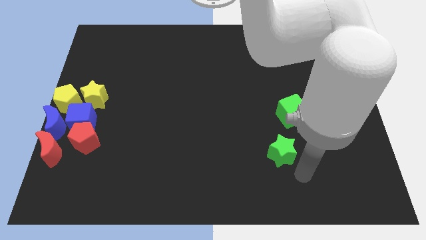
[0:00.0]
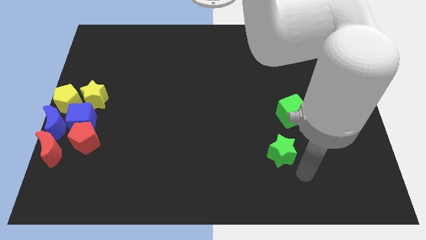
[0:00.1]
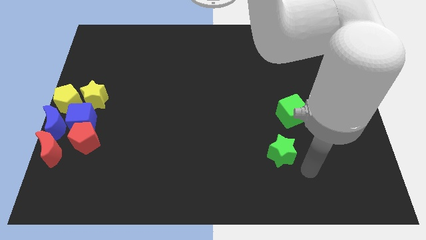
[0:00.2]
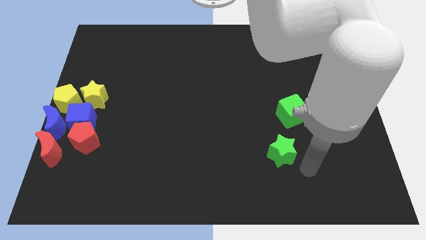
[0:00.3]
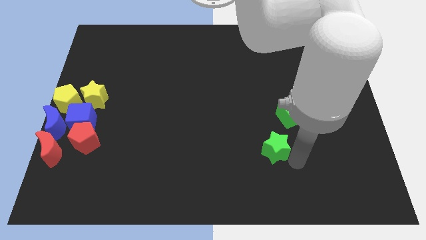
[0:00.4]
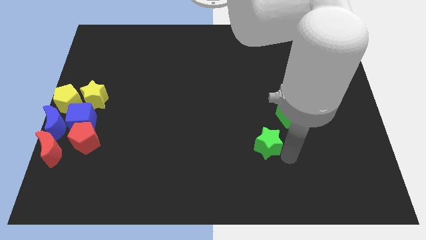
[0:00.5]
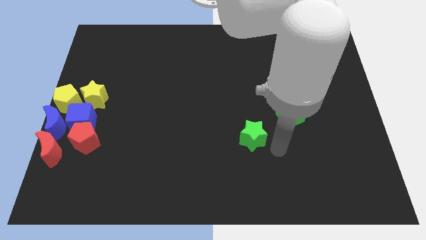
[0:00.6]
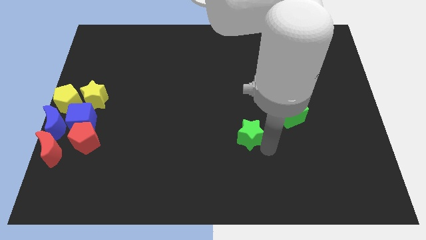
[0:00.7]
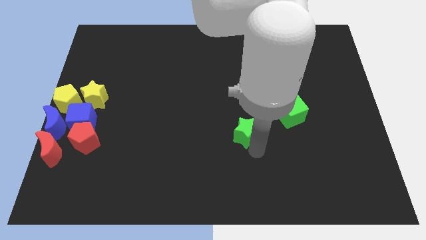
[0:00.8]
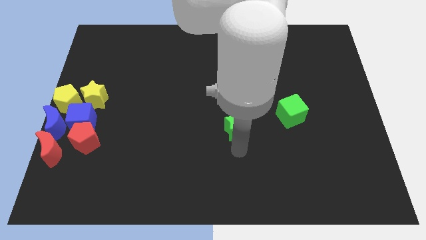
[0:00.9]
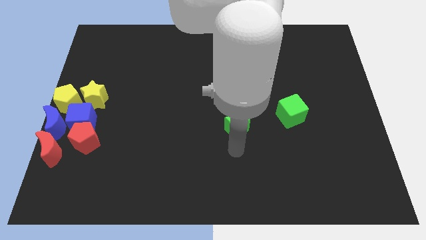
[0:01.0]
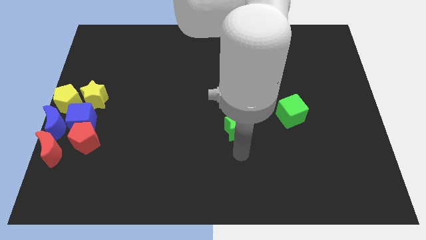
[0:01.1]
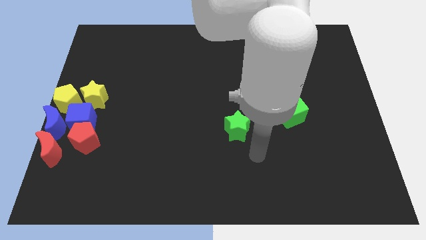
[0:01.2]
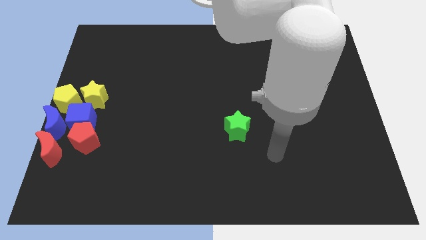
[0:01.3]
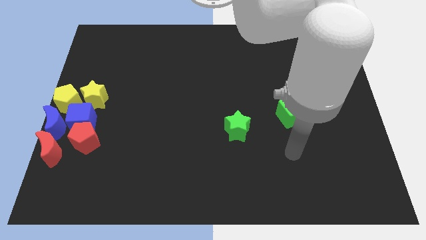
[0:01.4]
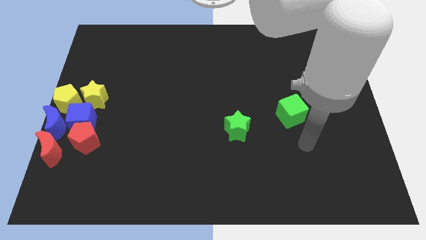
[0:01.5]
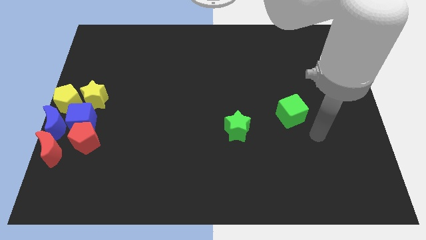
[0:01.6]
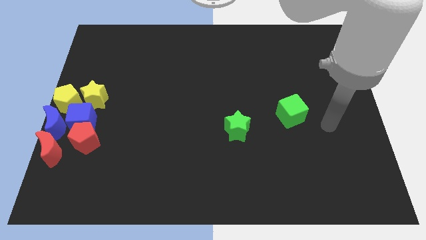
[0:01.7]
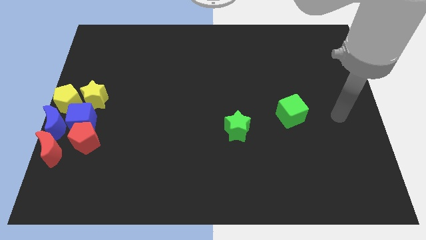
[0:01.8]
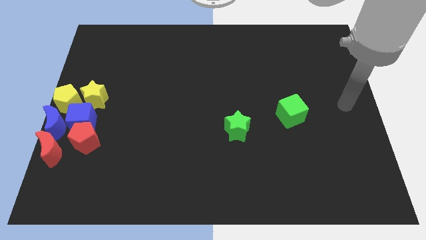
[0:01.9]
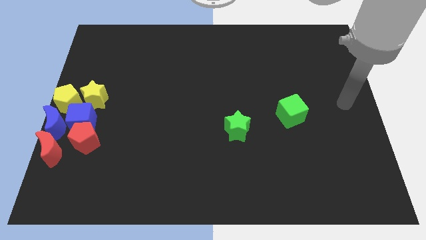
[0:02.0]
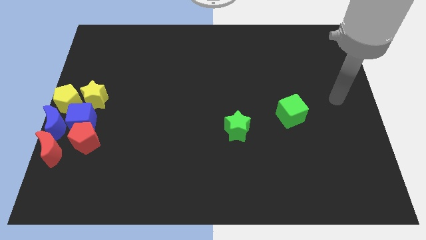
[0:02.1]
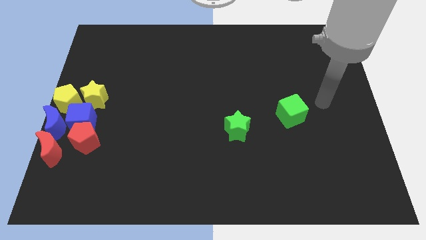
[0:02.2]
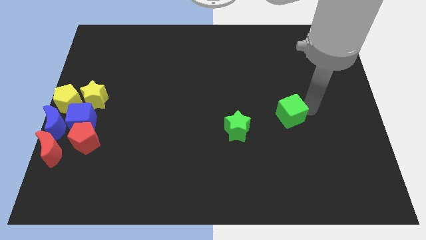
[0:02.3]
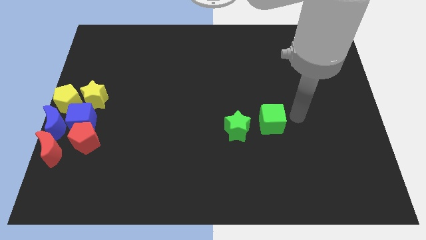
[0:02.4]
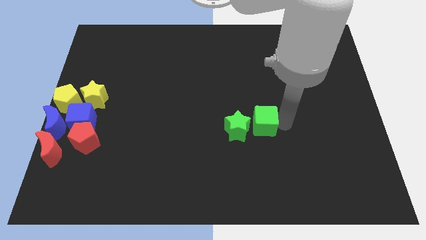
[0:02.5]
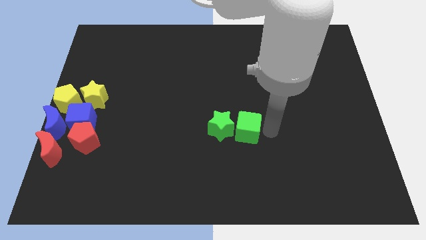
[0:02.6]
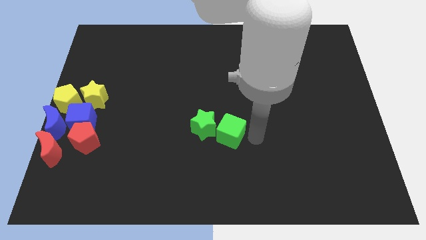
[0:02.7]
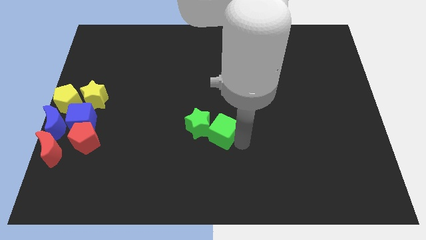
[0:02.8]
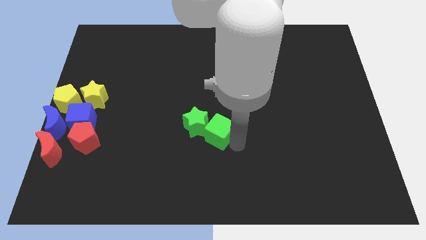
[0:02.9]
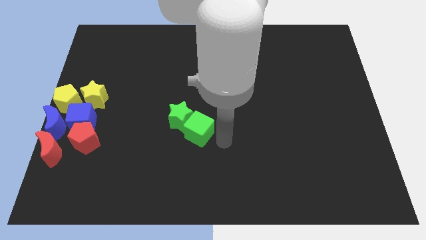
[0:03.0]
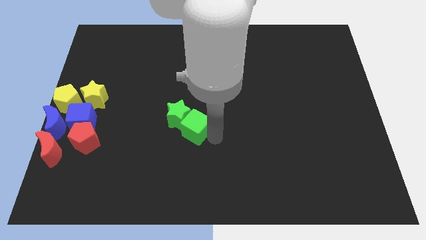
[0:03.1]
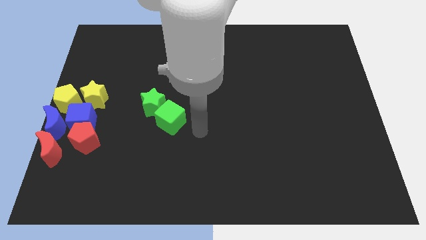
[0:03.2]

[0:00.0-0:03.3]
slide the green star and green cube towards the yellow star

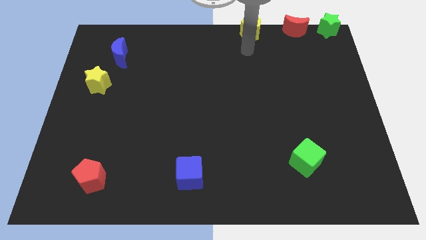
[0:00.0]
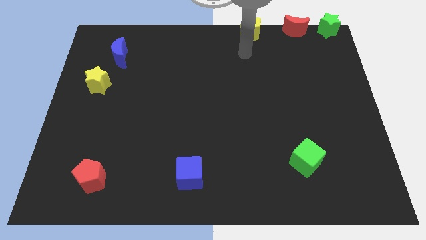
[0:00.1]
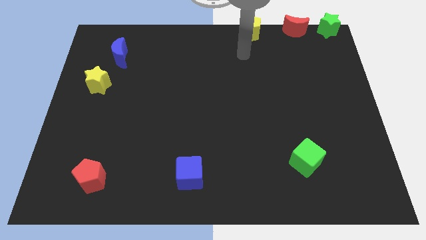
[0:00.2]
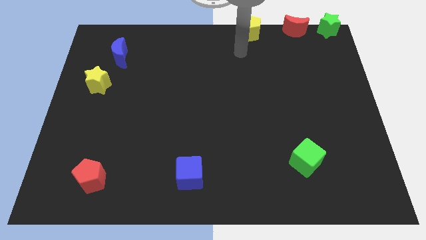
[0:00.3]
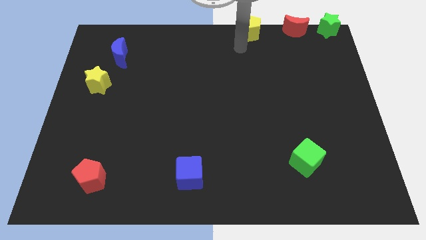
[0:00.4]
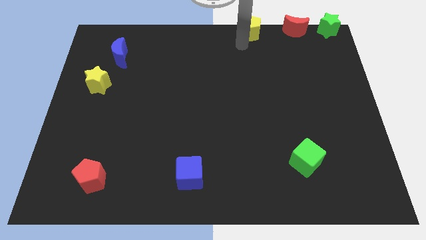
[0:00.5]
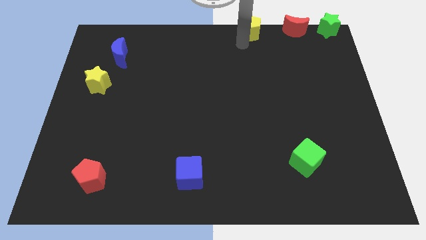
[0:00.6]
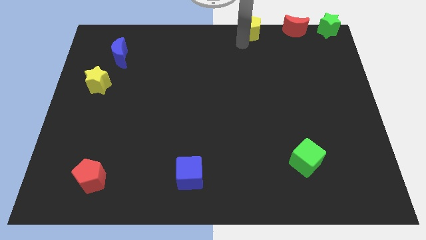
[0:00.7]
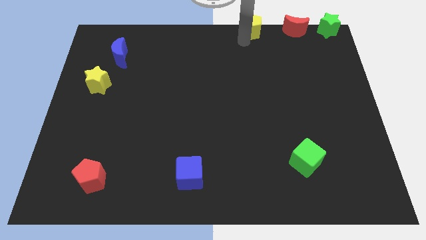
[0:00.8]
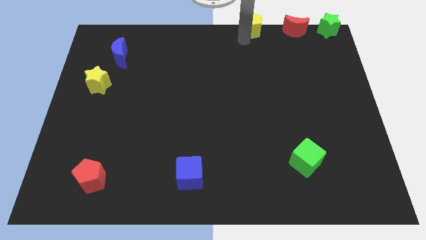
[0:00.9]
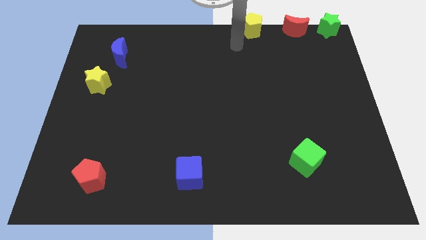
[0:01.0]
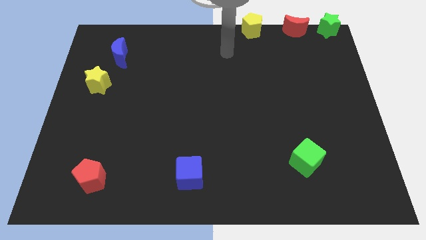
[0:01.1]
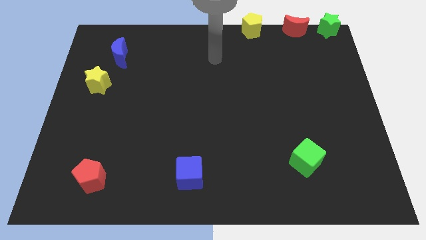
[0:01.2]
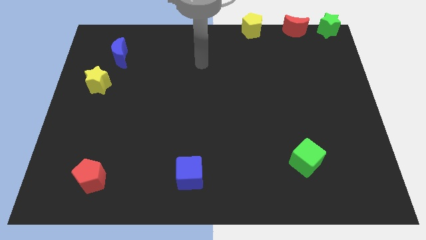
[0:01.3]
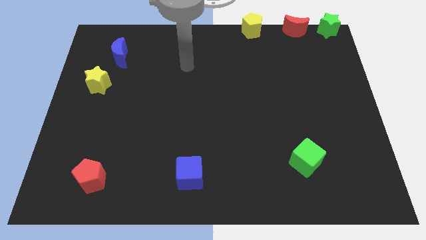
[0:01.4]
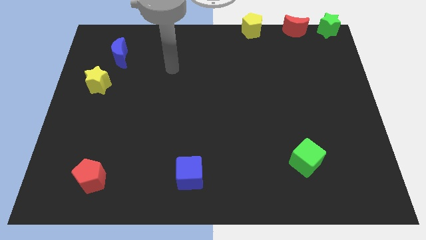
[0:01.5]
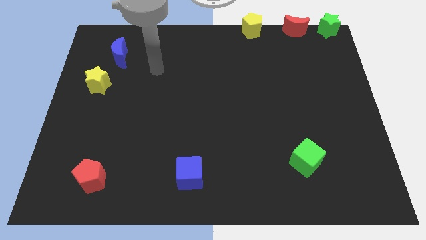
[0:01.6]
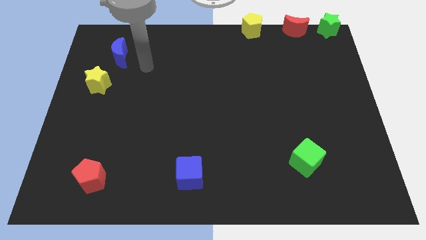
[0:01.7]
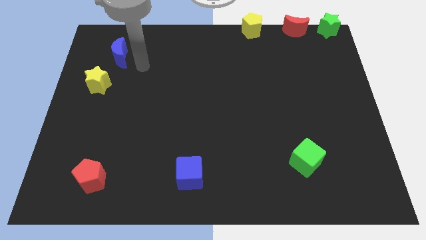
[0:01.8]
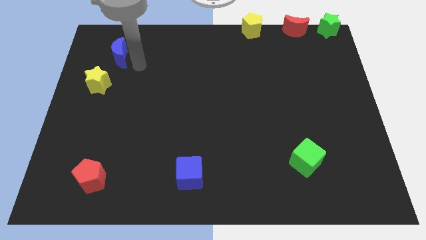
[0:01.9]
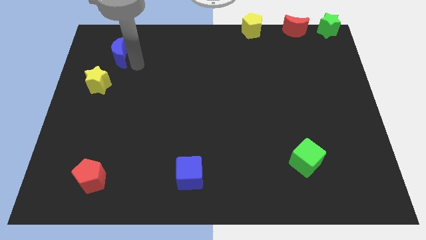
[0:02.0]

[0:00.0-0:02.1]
move the arm towards the blue crescent

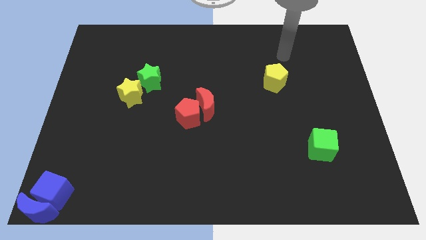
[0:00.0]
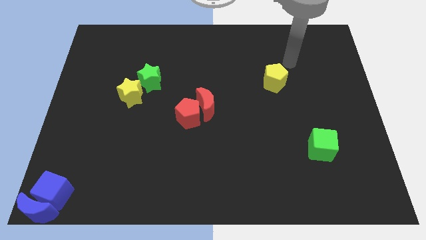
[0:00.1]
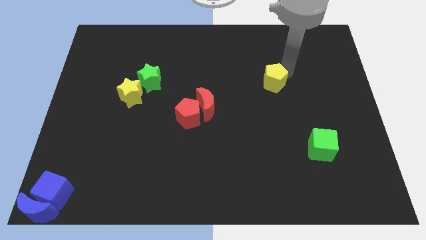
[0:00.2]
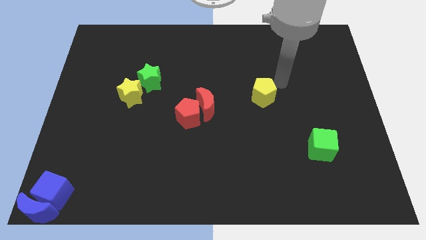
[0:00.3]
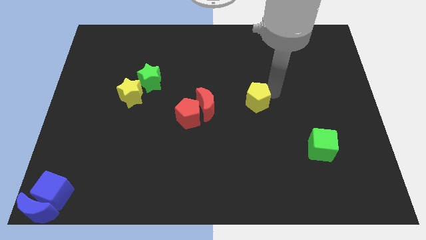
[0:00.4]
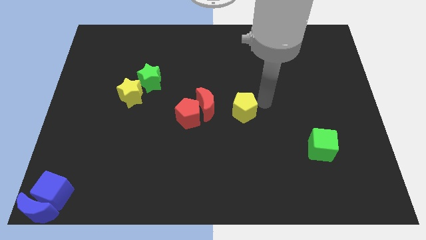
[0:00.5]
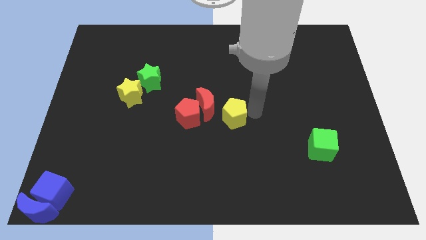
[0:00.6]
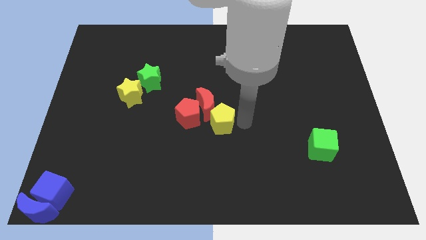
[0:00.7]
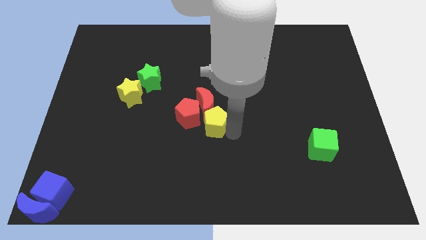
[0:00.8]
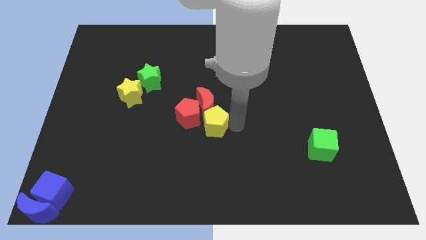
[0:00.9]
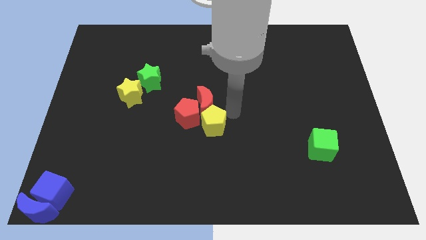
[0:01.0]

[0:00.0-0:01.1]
push yellow pentagon below the red moon

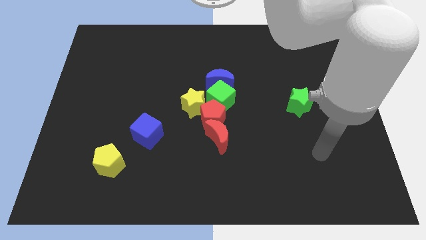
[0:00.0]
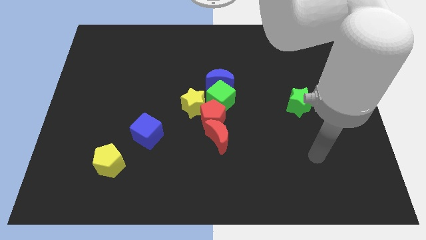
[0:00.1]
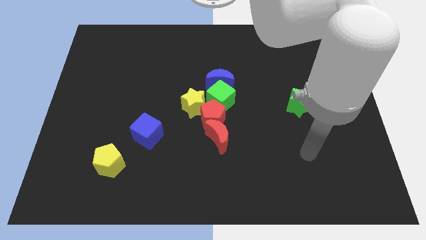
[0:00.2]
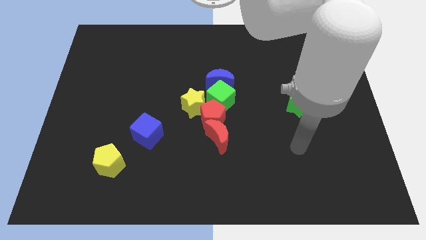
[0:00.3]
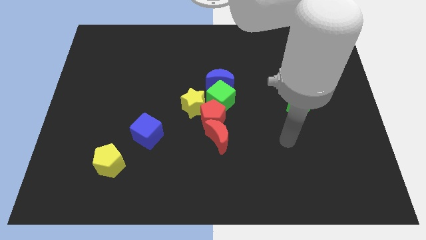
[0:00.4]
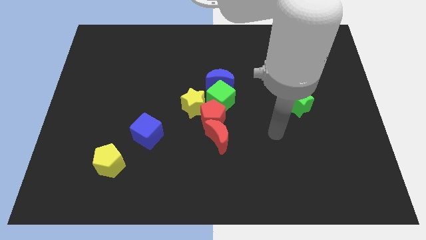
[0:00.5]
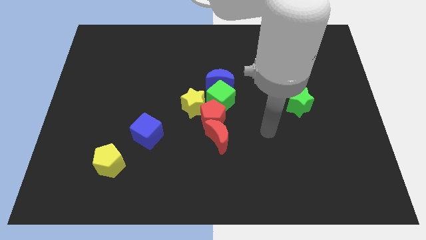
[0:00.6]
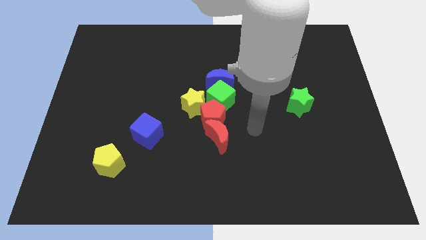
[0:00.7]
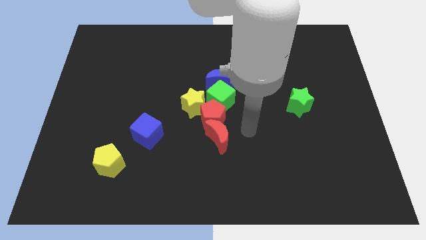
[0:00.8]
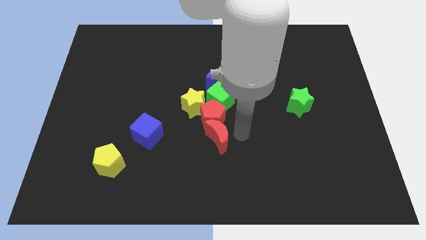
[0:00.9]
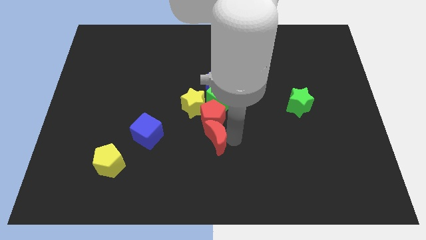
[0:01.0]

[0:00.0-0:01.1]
touch the right side of the red crescent

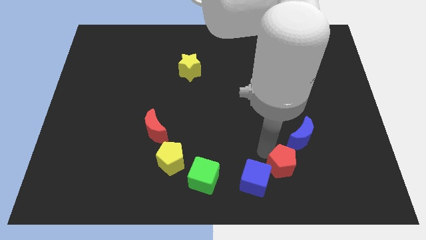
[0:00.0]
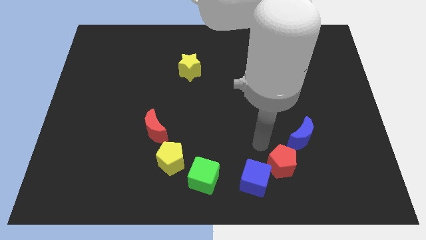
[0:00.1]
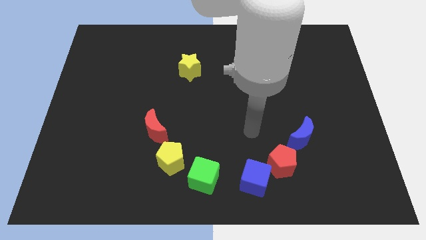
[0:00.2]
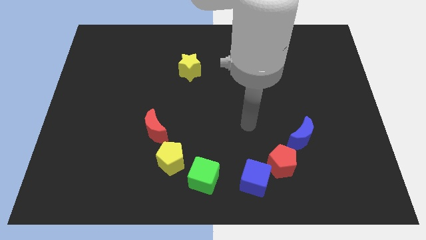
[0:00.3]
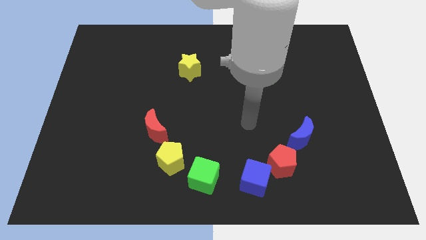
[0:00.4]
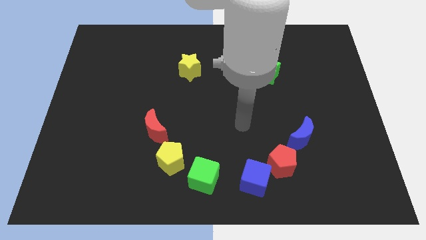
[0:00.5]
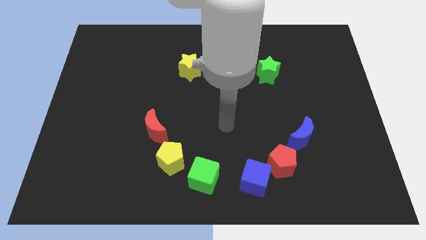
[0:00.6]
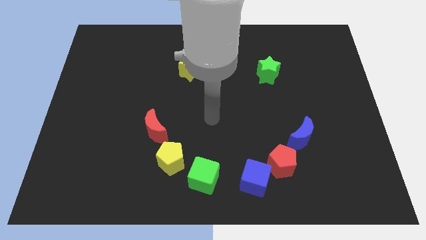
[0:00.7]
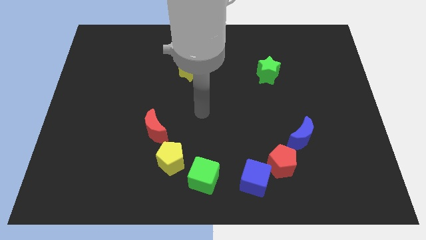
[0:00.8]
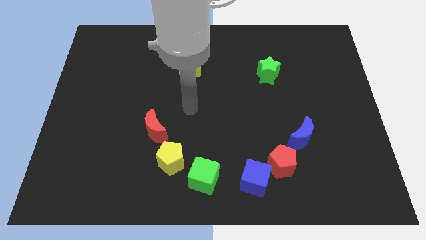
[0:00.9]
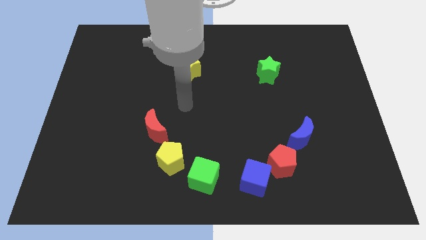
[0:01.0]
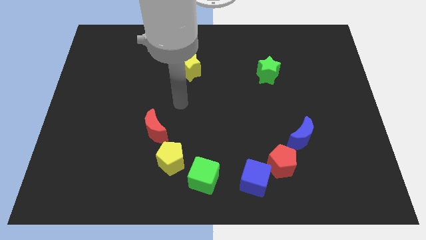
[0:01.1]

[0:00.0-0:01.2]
move the arm away from the red pentagon

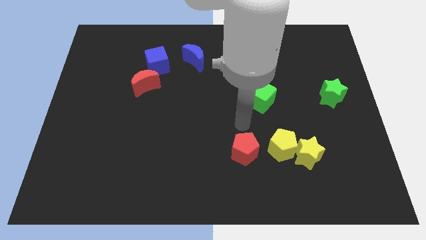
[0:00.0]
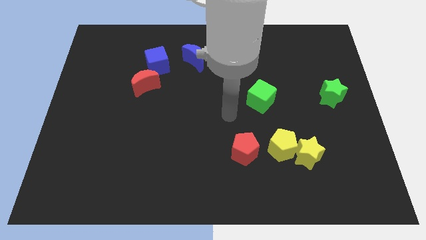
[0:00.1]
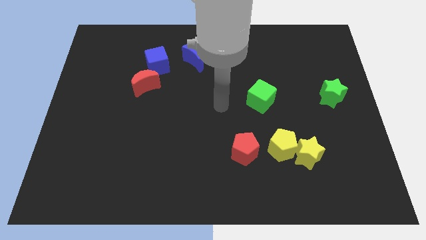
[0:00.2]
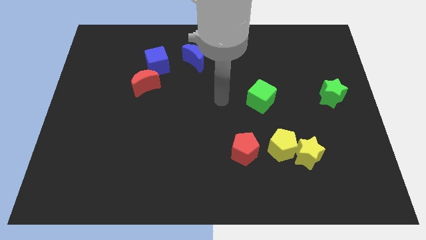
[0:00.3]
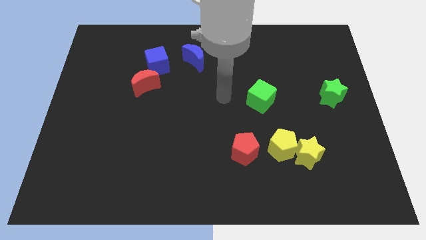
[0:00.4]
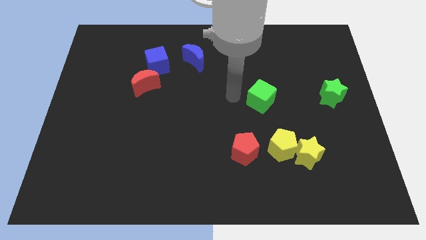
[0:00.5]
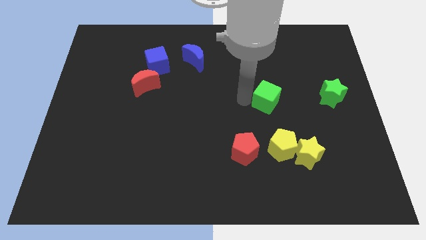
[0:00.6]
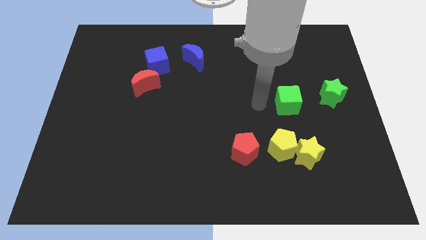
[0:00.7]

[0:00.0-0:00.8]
push green cube below yellow pentagon
